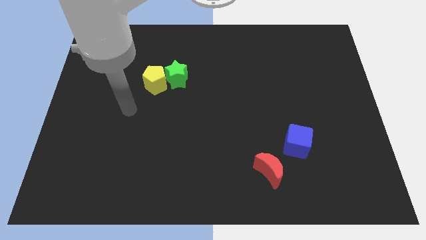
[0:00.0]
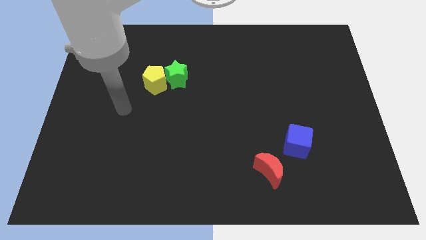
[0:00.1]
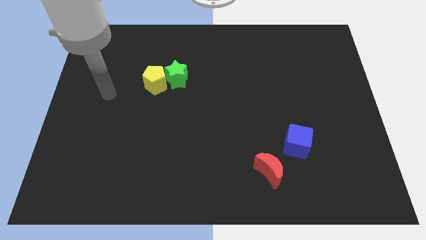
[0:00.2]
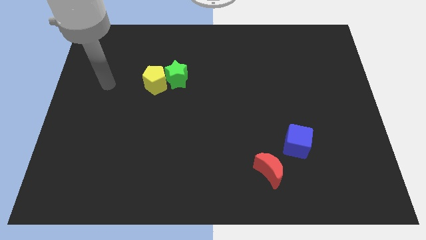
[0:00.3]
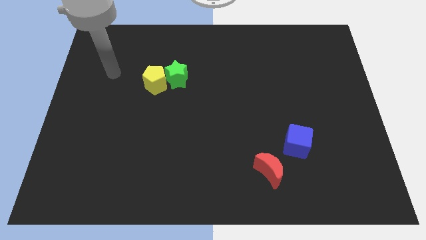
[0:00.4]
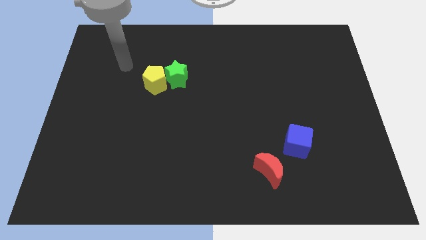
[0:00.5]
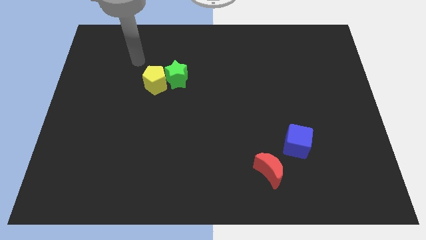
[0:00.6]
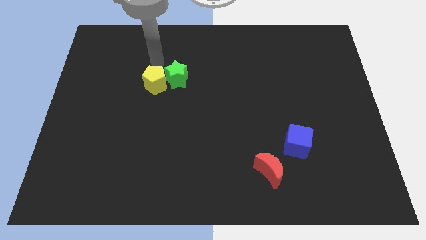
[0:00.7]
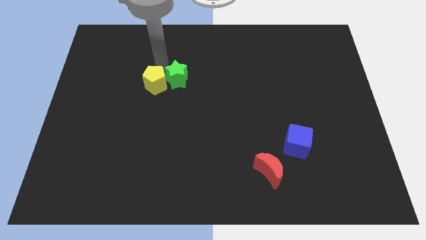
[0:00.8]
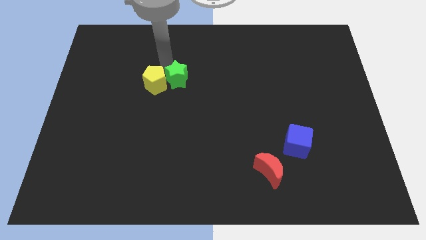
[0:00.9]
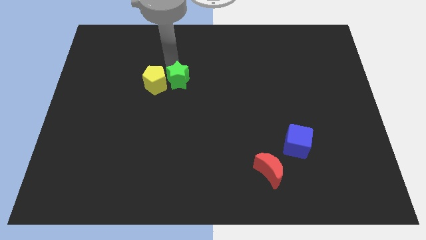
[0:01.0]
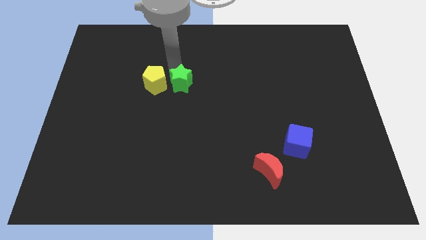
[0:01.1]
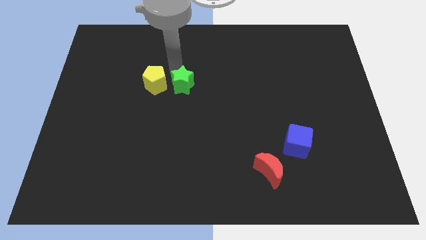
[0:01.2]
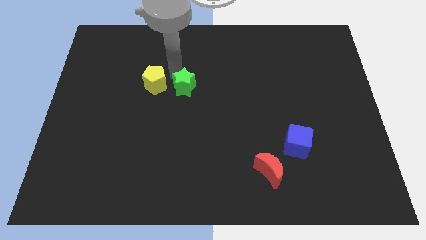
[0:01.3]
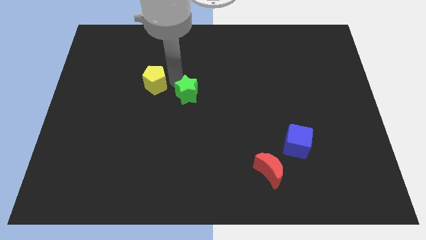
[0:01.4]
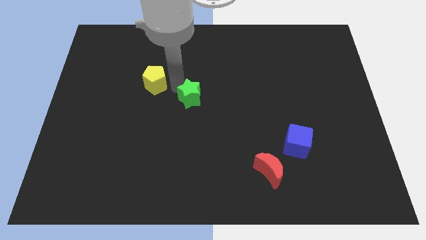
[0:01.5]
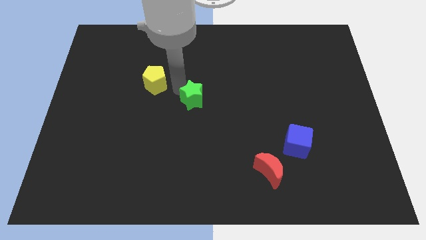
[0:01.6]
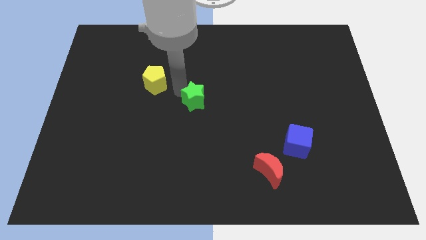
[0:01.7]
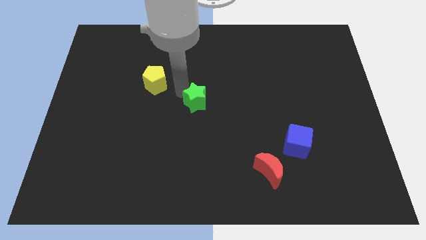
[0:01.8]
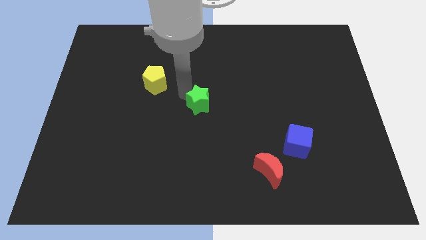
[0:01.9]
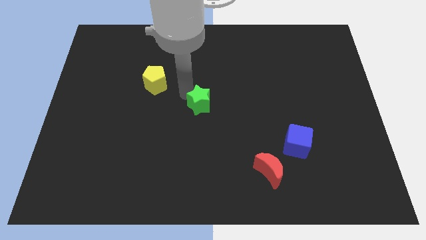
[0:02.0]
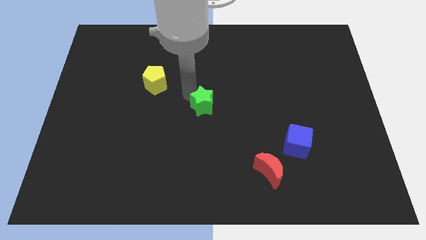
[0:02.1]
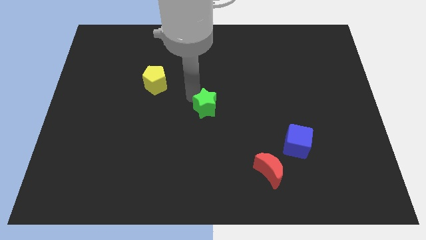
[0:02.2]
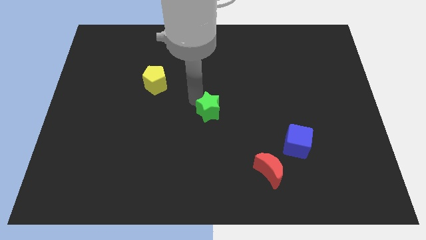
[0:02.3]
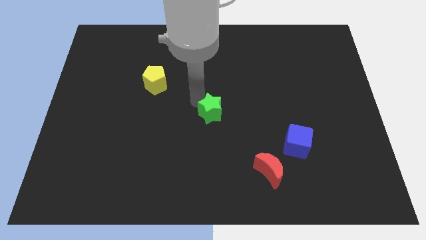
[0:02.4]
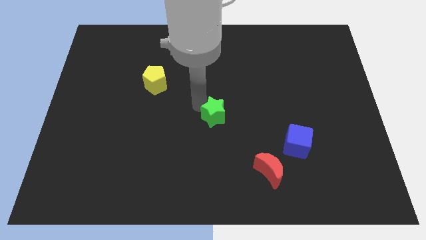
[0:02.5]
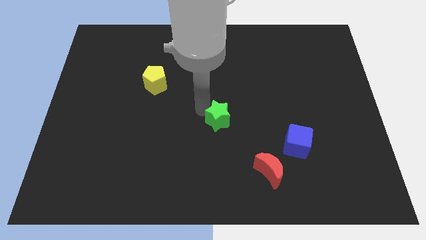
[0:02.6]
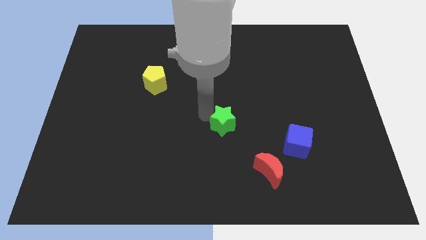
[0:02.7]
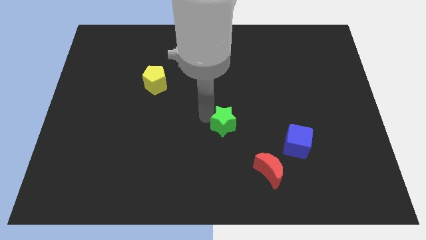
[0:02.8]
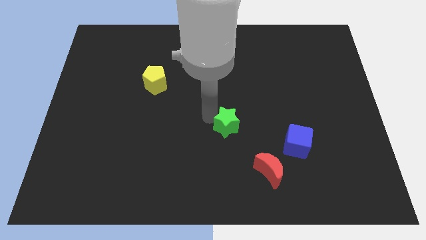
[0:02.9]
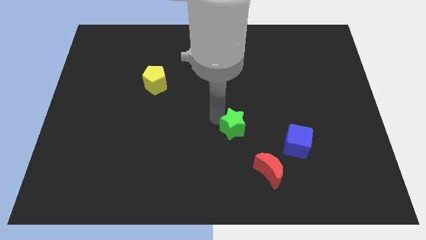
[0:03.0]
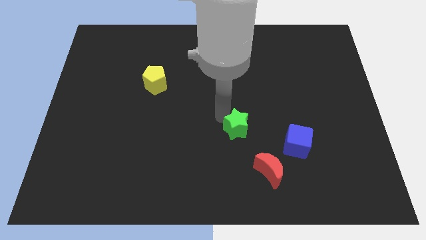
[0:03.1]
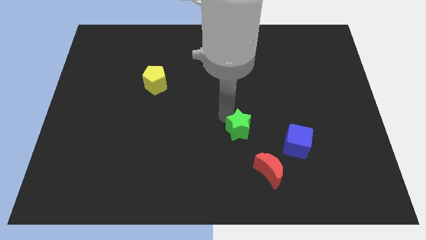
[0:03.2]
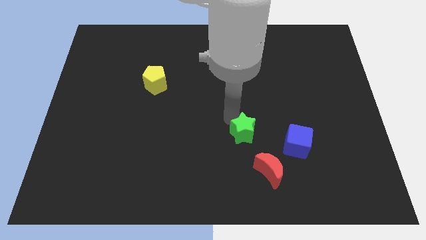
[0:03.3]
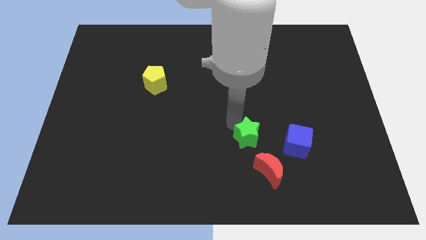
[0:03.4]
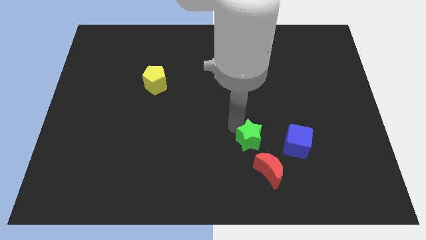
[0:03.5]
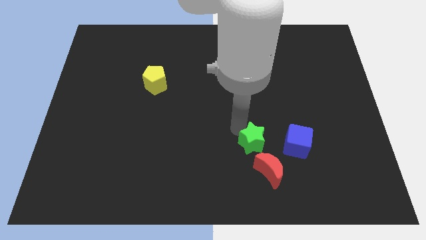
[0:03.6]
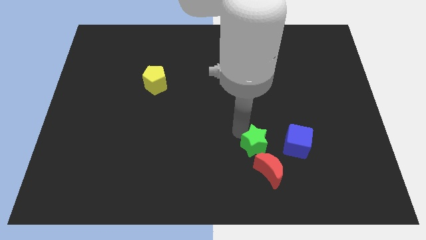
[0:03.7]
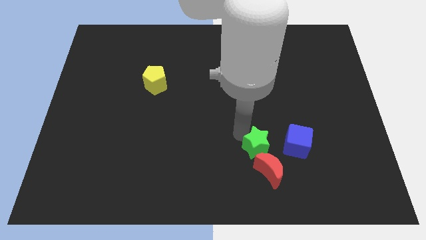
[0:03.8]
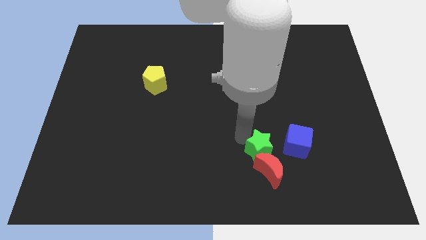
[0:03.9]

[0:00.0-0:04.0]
slide the star towards the moon

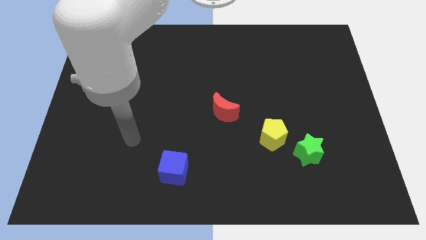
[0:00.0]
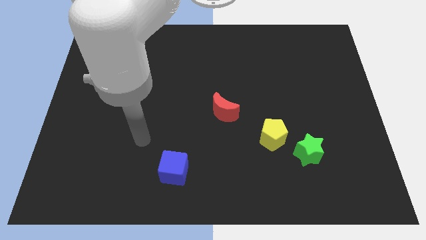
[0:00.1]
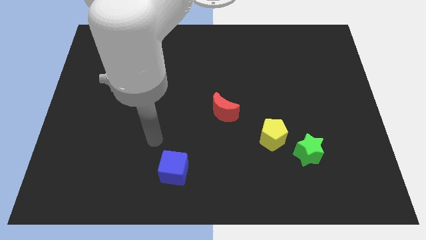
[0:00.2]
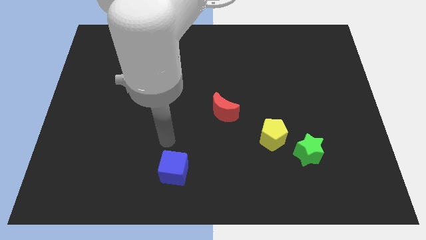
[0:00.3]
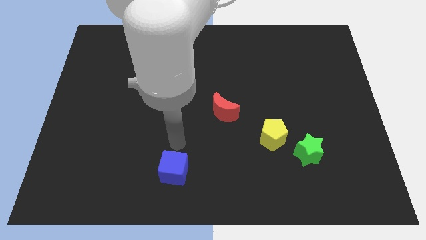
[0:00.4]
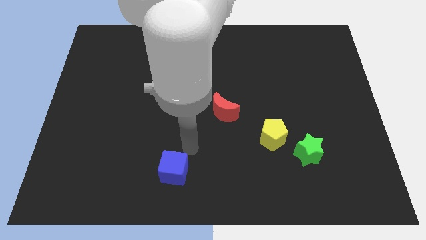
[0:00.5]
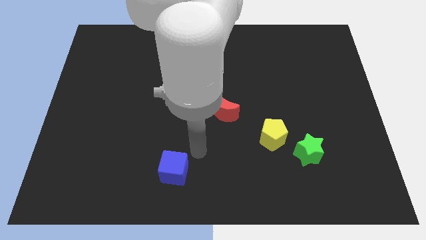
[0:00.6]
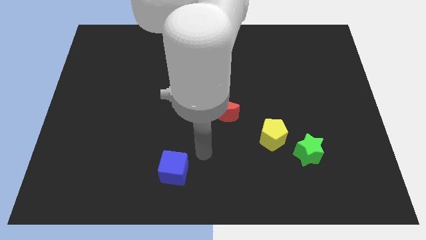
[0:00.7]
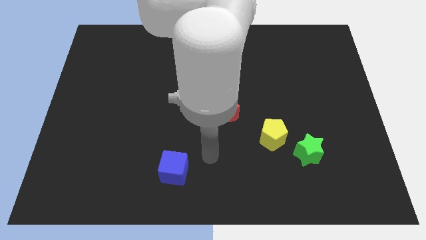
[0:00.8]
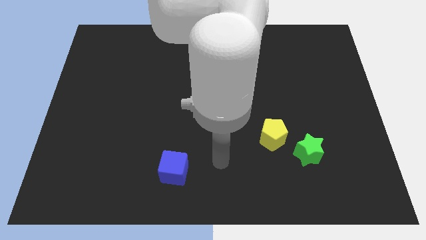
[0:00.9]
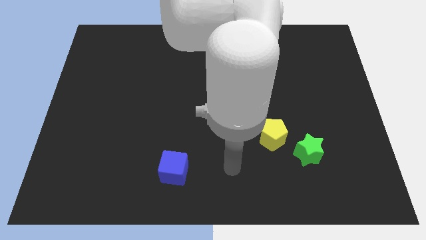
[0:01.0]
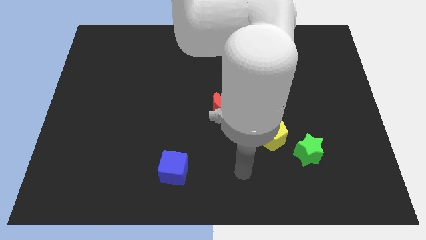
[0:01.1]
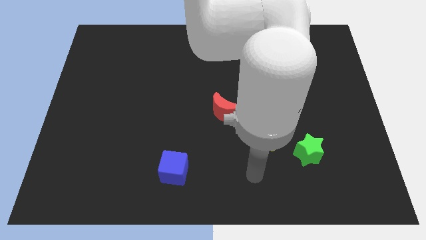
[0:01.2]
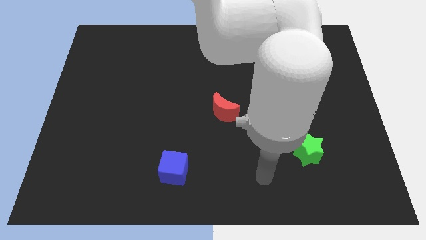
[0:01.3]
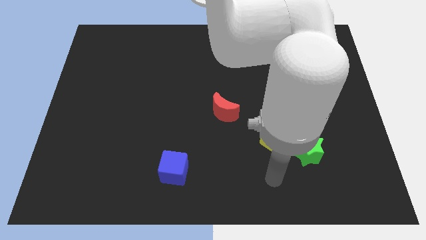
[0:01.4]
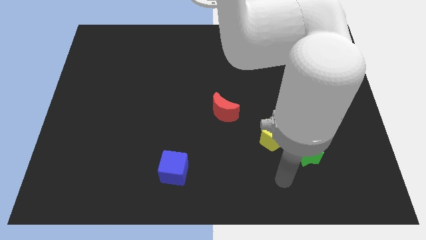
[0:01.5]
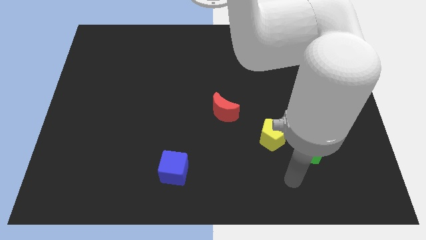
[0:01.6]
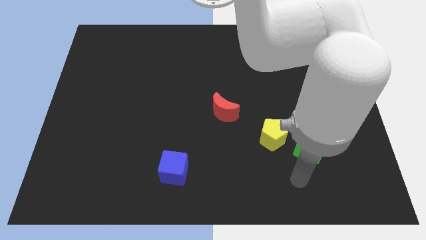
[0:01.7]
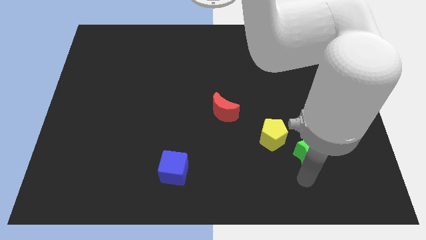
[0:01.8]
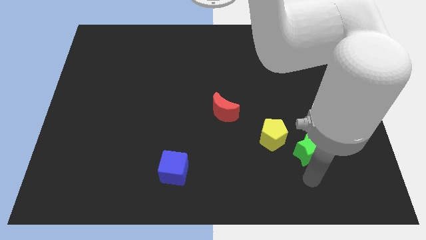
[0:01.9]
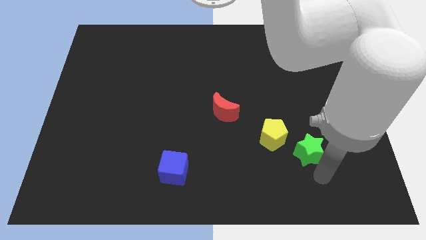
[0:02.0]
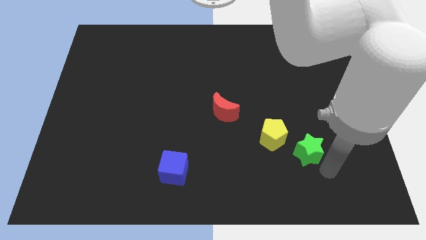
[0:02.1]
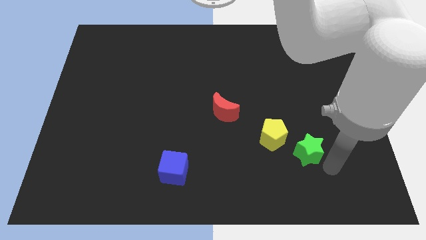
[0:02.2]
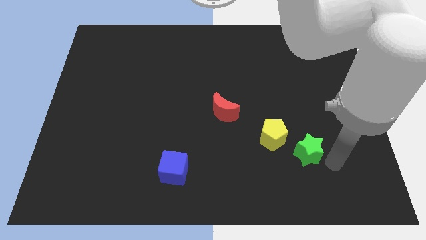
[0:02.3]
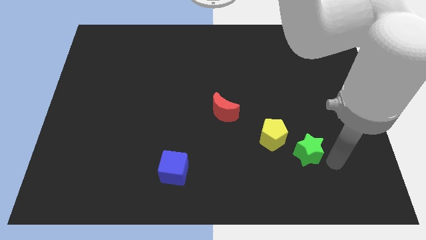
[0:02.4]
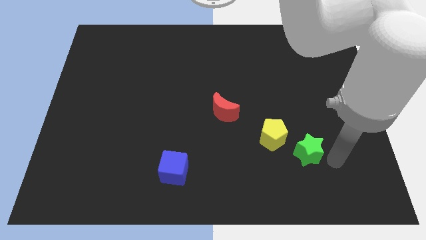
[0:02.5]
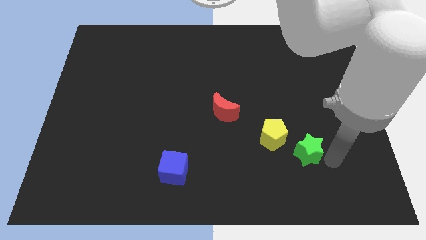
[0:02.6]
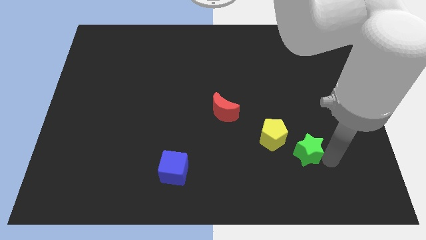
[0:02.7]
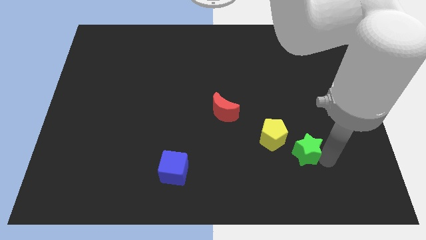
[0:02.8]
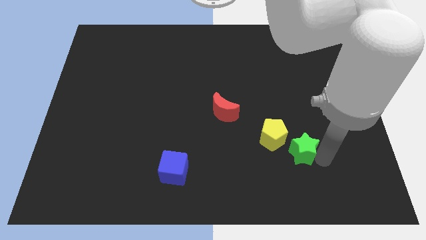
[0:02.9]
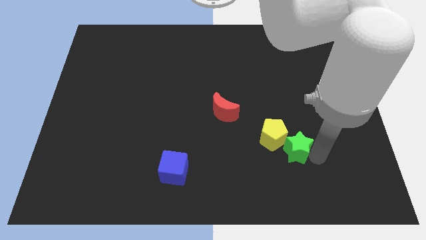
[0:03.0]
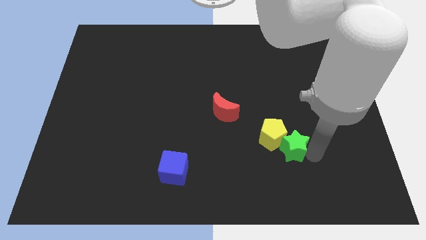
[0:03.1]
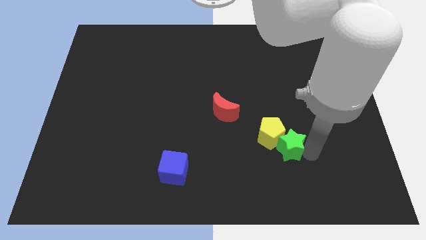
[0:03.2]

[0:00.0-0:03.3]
slide the star next to the pentagon

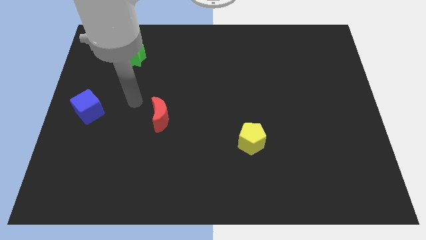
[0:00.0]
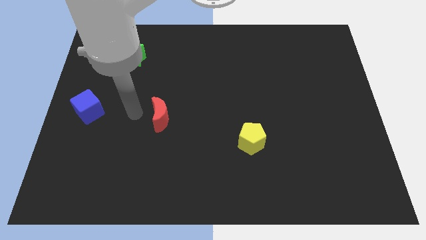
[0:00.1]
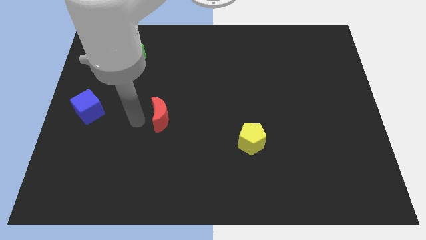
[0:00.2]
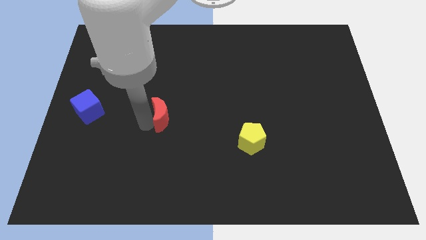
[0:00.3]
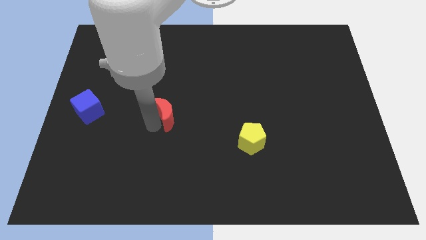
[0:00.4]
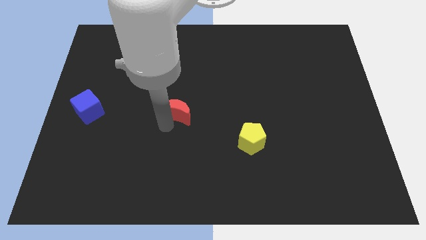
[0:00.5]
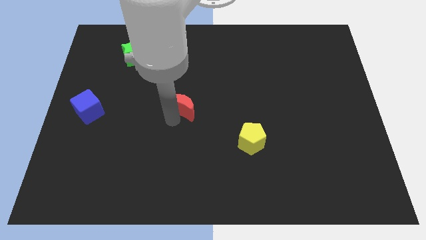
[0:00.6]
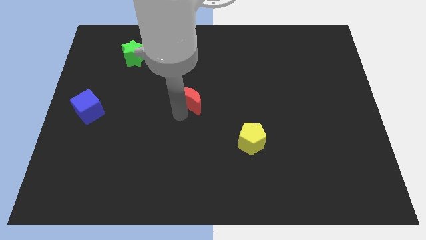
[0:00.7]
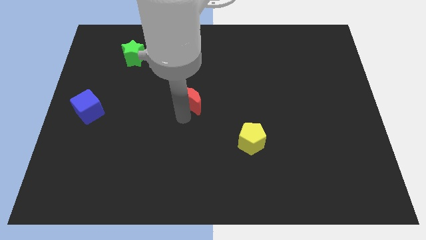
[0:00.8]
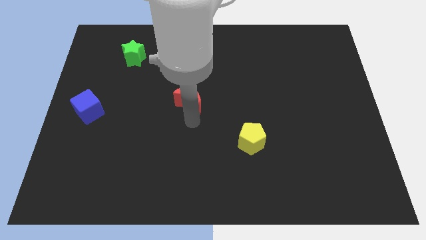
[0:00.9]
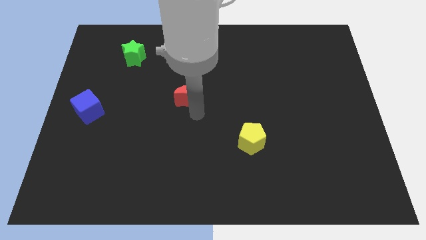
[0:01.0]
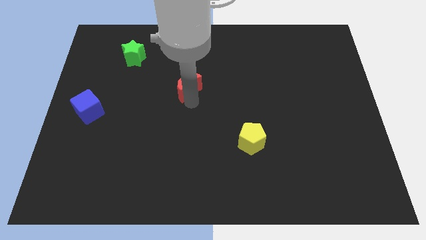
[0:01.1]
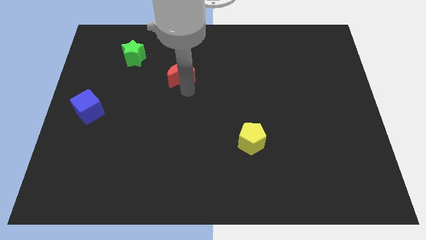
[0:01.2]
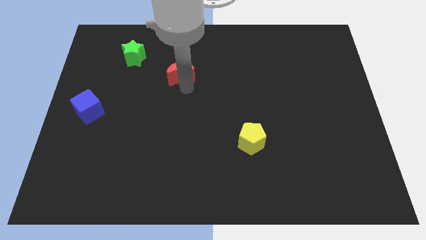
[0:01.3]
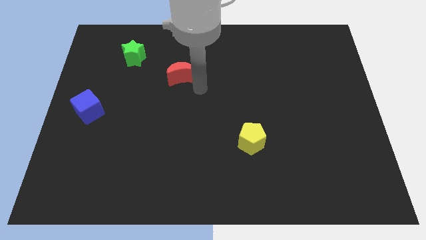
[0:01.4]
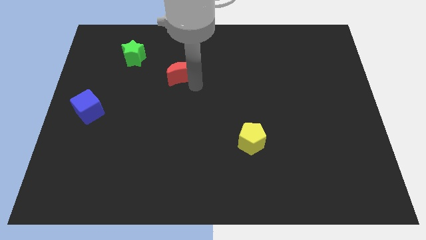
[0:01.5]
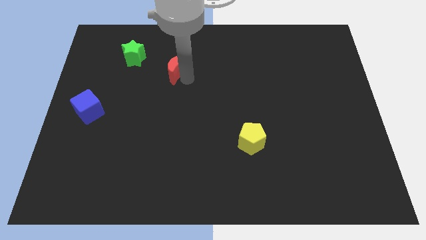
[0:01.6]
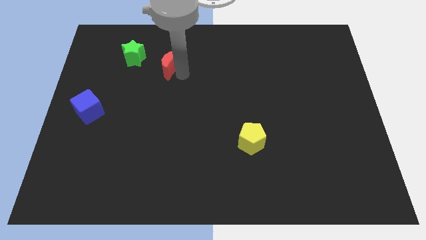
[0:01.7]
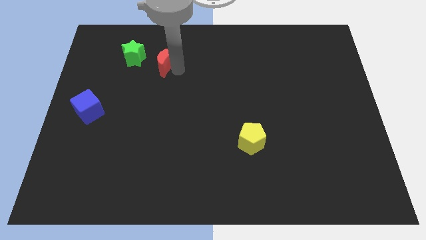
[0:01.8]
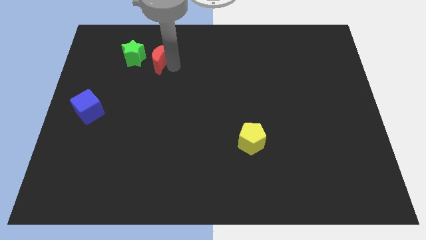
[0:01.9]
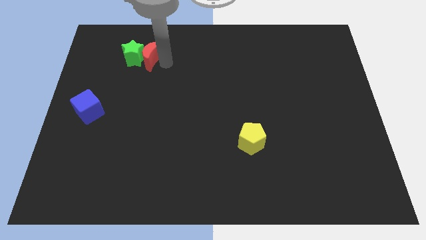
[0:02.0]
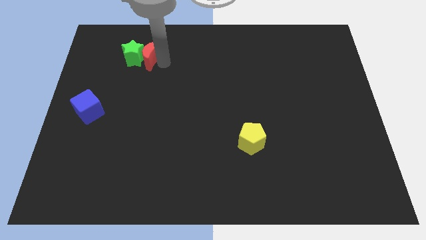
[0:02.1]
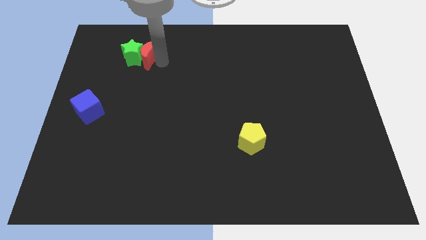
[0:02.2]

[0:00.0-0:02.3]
move the red moon next to the green block
